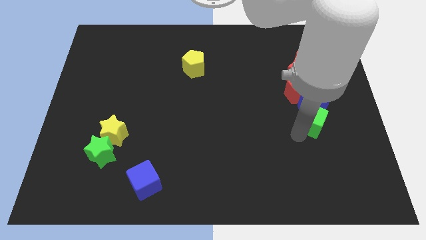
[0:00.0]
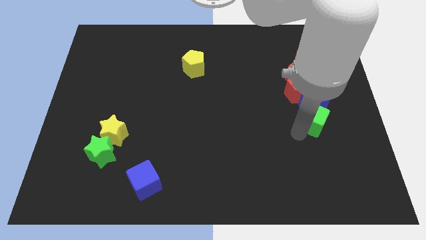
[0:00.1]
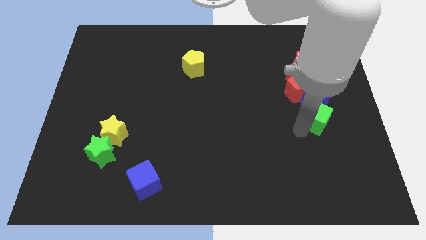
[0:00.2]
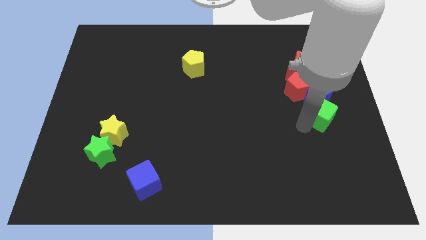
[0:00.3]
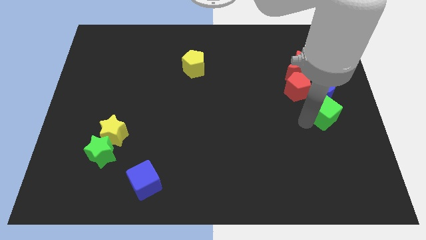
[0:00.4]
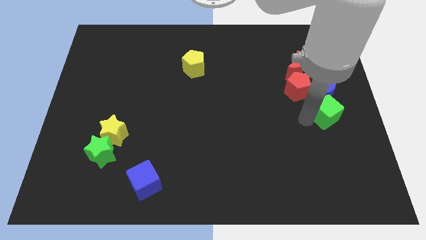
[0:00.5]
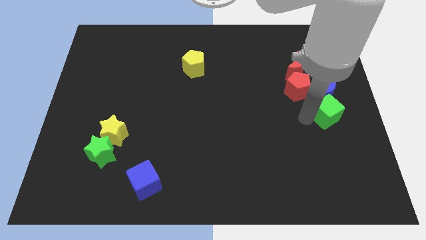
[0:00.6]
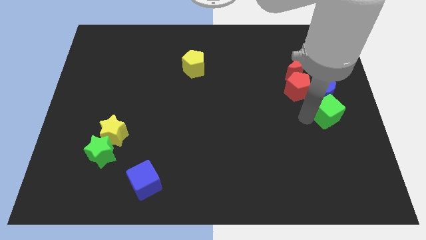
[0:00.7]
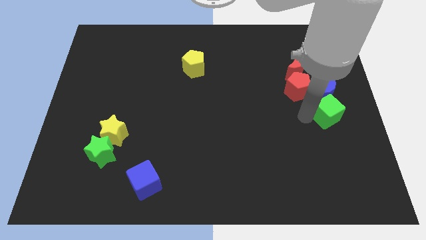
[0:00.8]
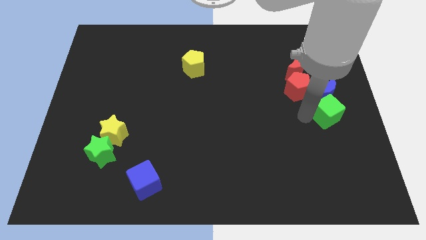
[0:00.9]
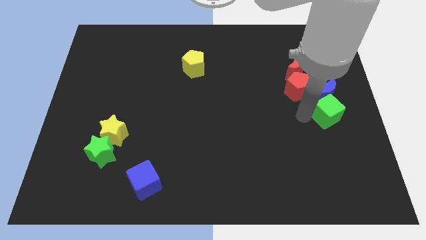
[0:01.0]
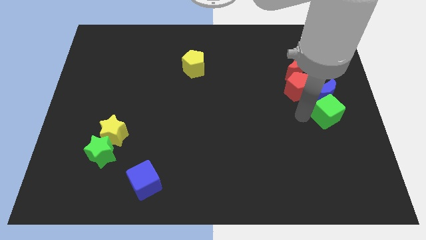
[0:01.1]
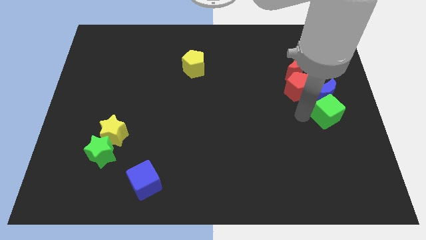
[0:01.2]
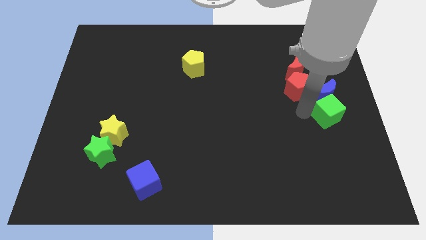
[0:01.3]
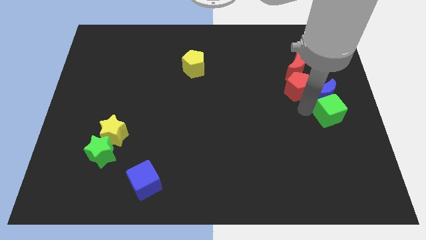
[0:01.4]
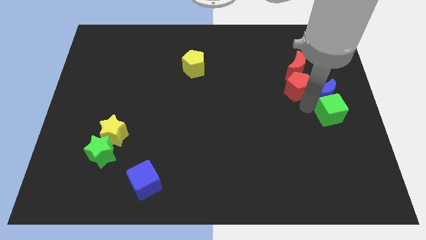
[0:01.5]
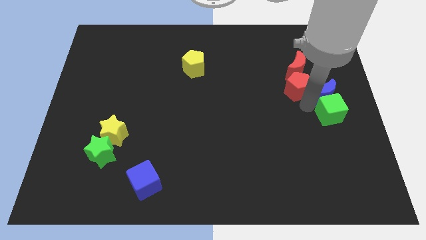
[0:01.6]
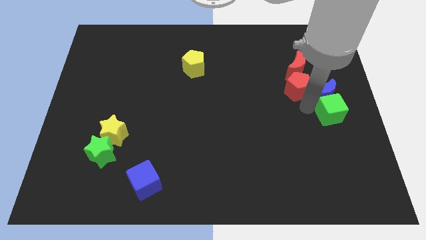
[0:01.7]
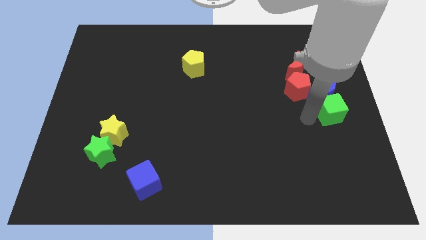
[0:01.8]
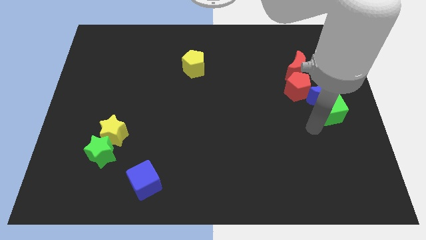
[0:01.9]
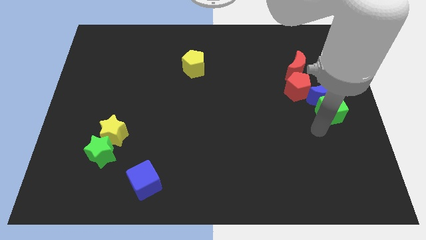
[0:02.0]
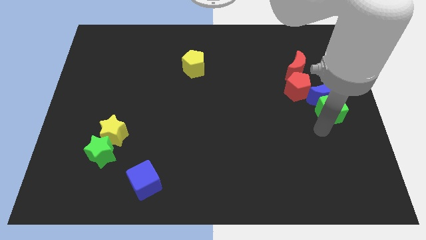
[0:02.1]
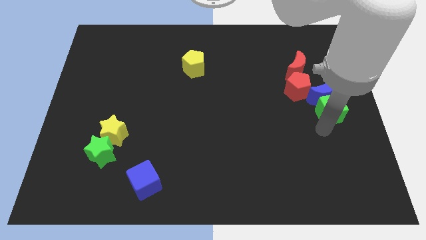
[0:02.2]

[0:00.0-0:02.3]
push the green cube and blue moon below the red blocks

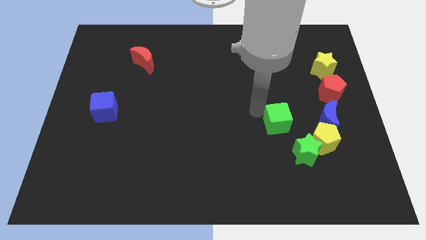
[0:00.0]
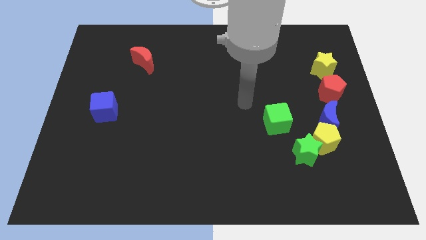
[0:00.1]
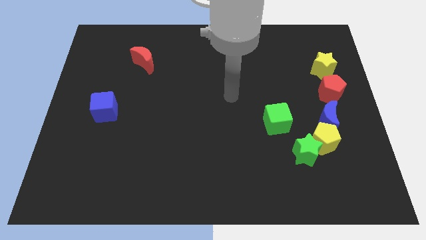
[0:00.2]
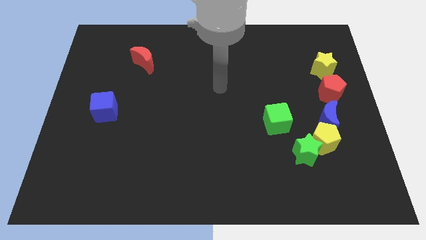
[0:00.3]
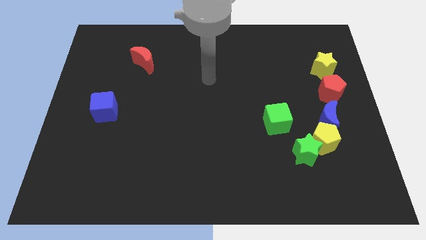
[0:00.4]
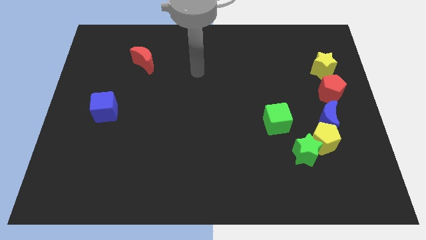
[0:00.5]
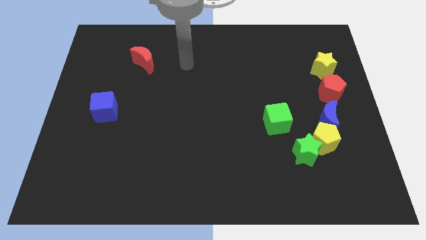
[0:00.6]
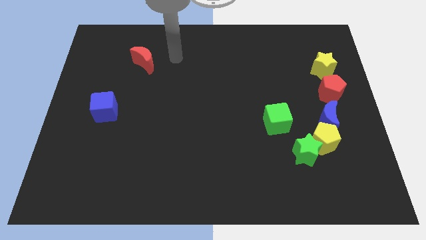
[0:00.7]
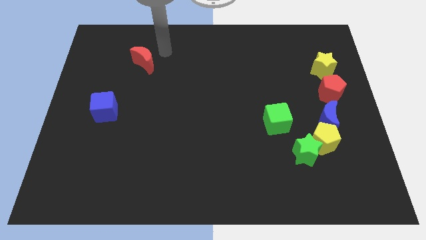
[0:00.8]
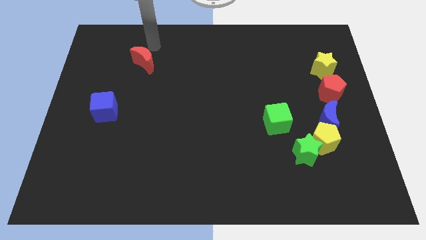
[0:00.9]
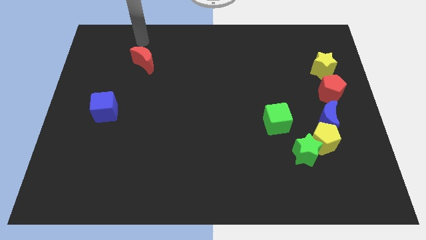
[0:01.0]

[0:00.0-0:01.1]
move your arm towards the red crescent

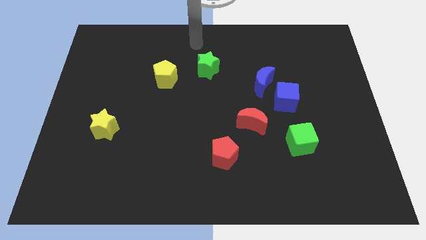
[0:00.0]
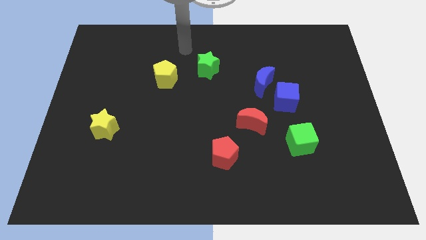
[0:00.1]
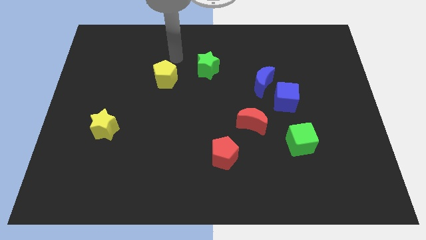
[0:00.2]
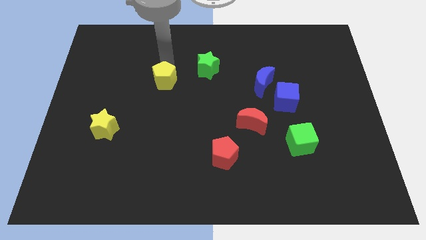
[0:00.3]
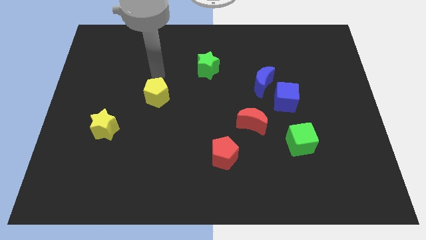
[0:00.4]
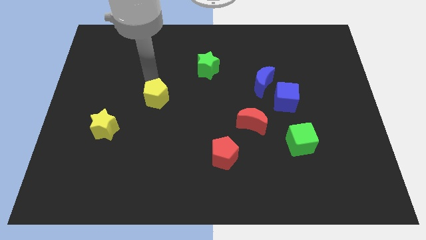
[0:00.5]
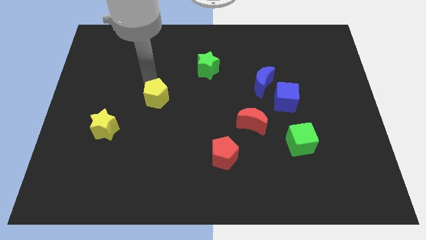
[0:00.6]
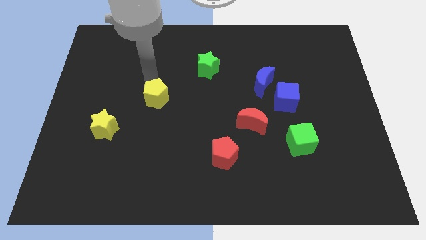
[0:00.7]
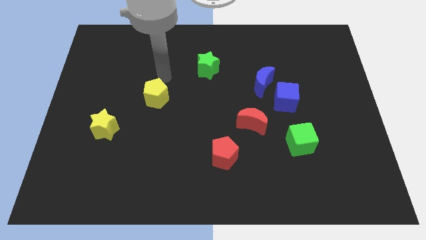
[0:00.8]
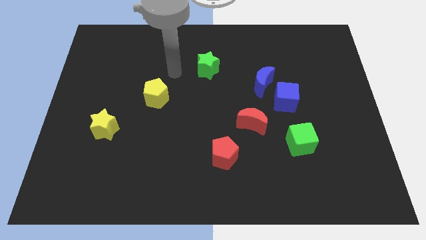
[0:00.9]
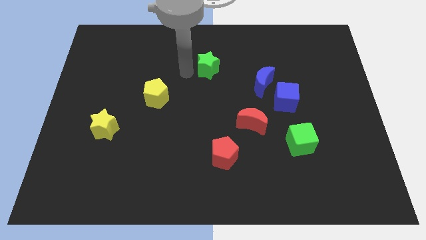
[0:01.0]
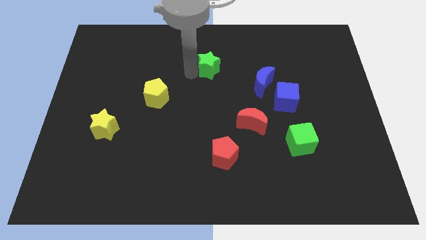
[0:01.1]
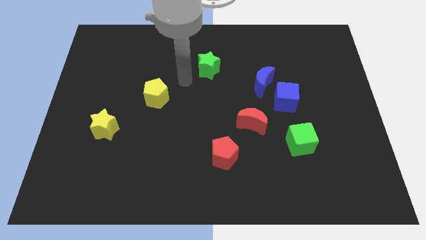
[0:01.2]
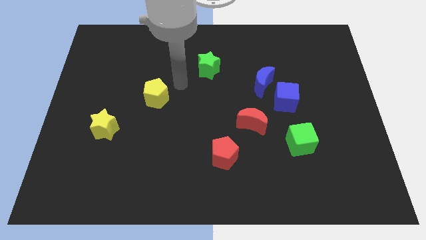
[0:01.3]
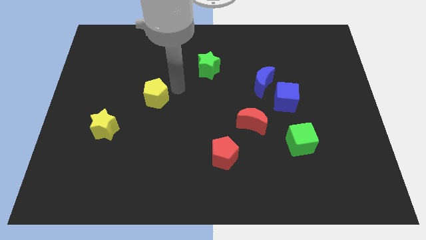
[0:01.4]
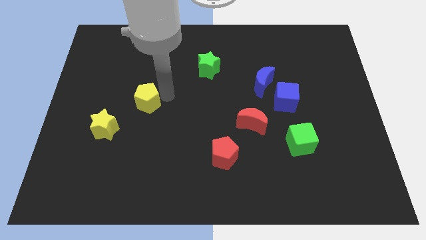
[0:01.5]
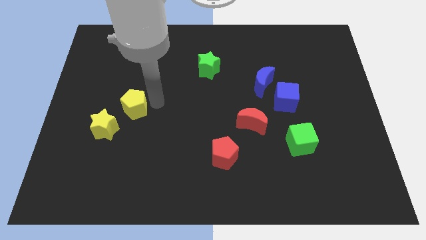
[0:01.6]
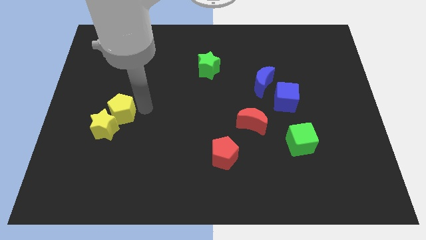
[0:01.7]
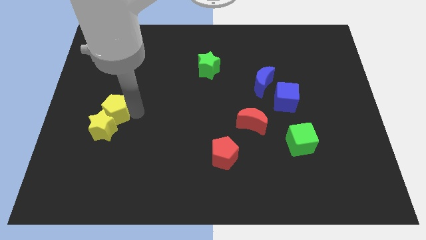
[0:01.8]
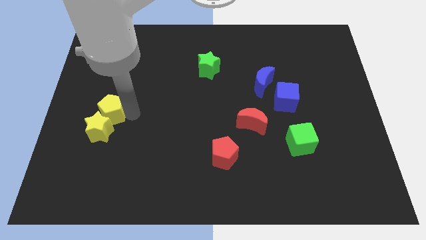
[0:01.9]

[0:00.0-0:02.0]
push the yellow pentagon into the yellow star

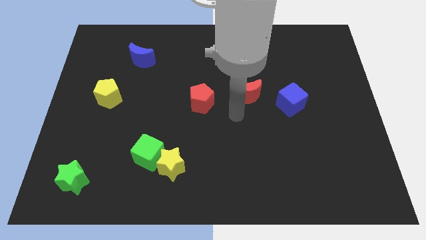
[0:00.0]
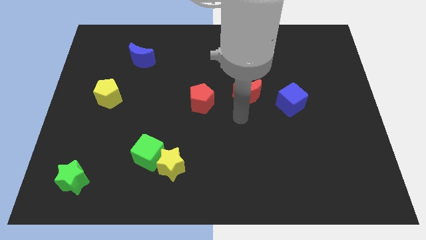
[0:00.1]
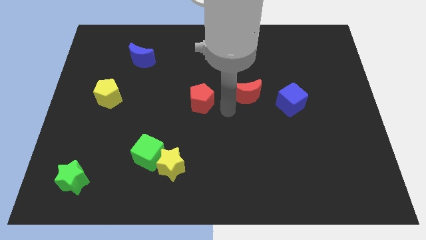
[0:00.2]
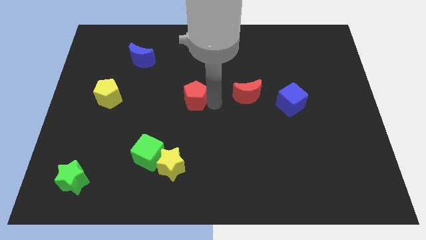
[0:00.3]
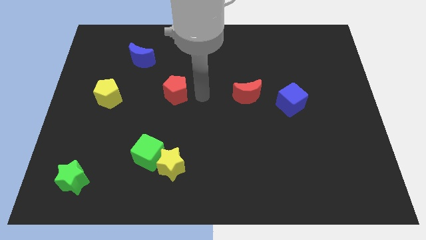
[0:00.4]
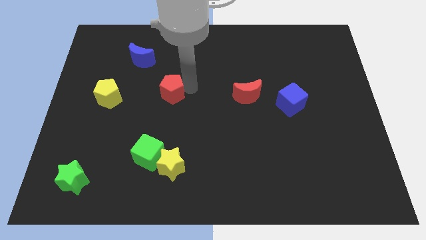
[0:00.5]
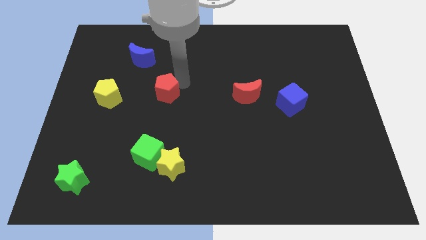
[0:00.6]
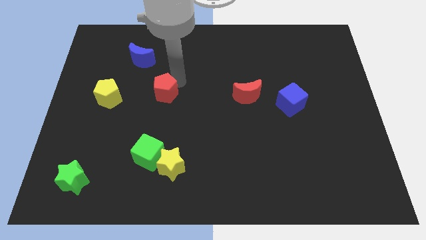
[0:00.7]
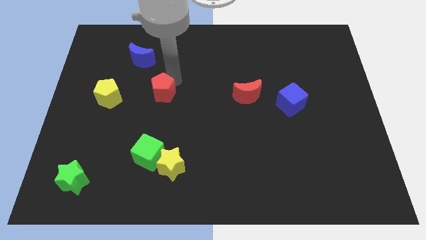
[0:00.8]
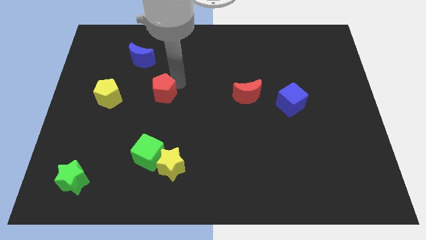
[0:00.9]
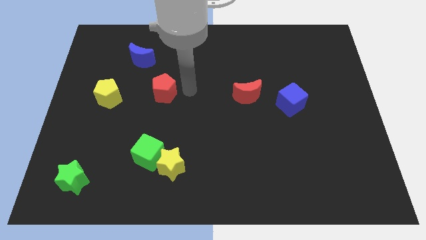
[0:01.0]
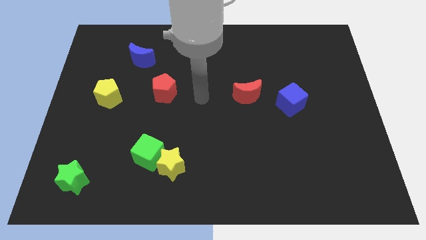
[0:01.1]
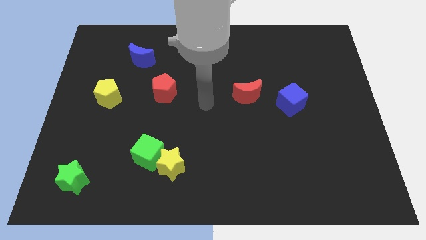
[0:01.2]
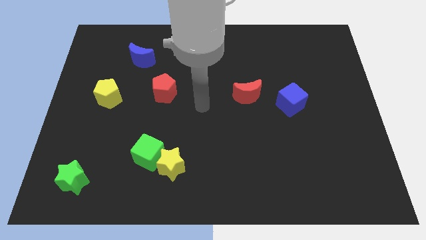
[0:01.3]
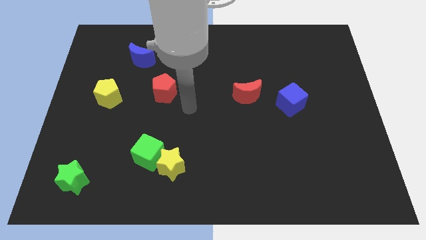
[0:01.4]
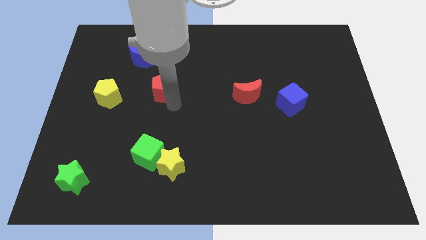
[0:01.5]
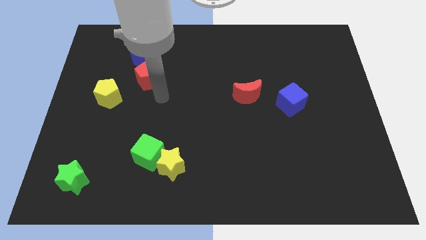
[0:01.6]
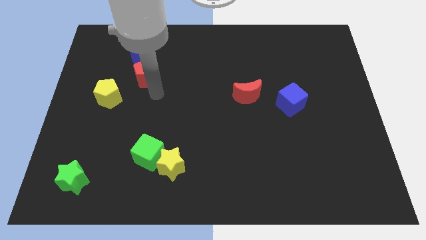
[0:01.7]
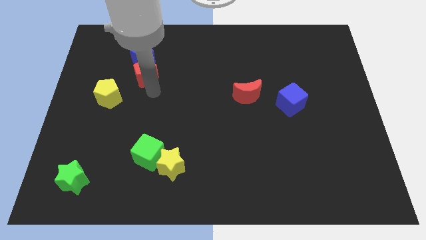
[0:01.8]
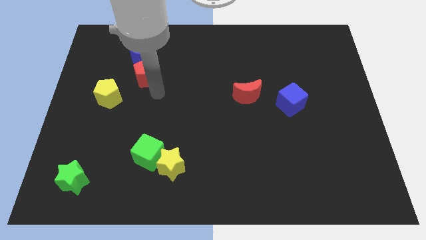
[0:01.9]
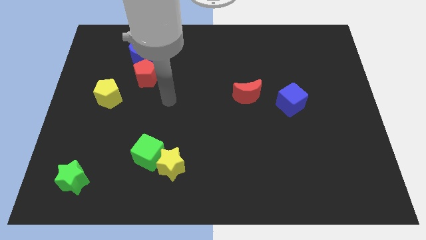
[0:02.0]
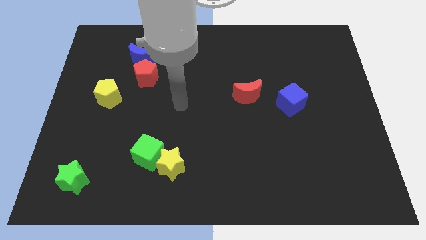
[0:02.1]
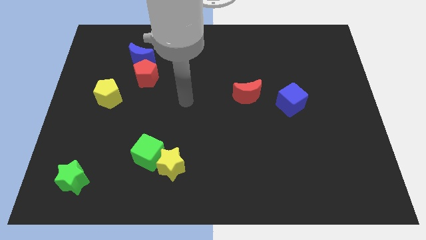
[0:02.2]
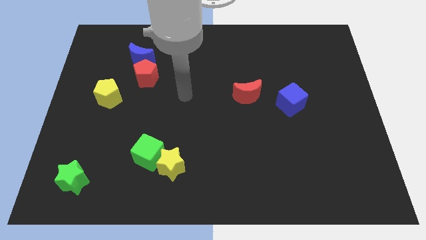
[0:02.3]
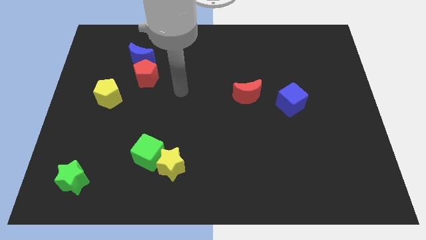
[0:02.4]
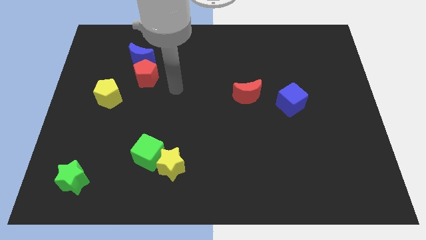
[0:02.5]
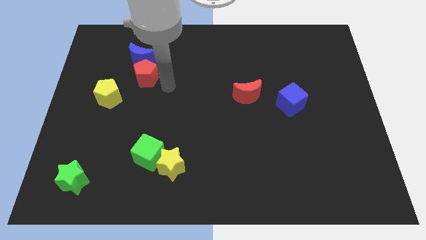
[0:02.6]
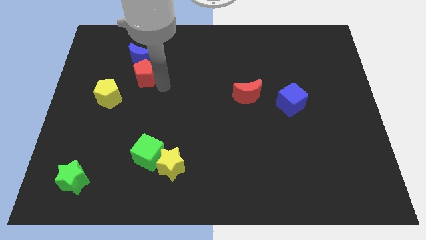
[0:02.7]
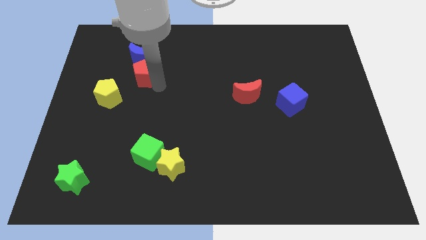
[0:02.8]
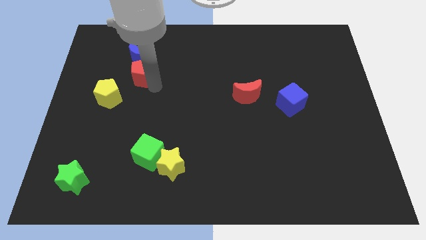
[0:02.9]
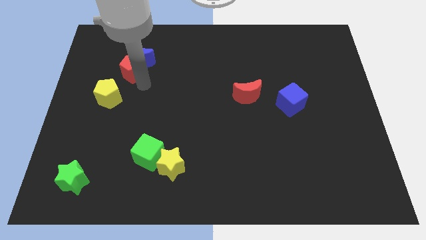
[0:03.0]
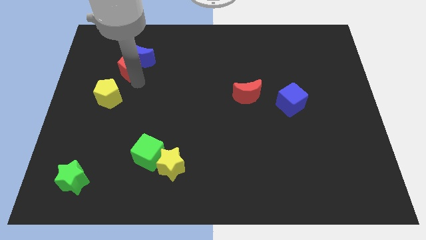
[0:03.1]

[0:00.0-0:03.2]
slide the red pentagon diagonally top right to the yellow pentagon

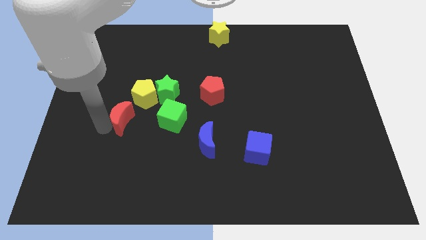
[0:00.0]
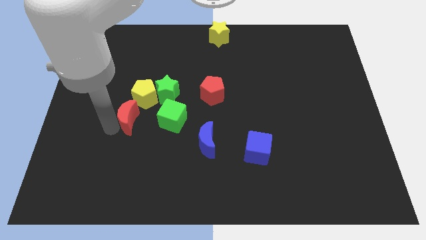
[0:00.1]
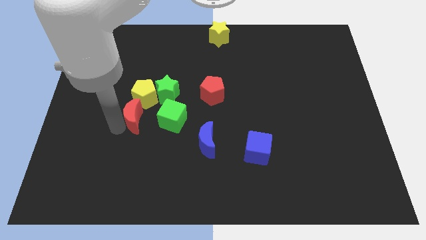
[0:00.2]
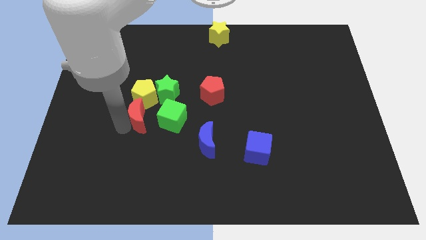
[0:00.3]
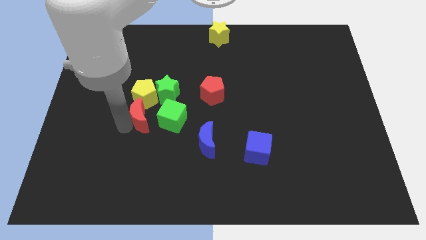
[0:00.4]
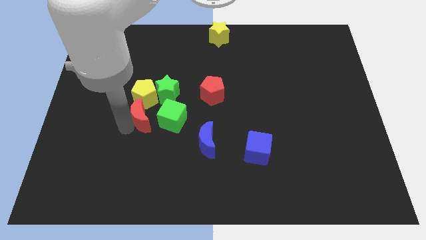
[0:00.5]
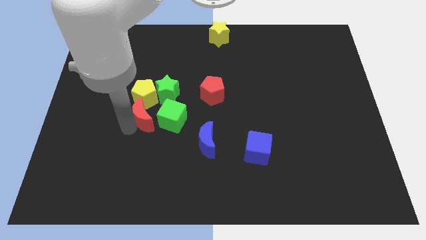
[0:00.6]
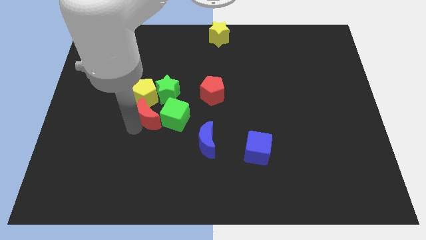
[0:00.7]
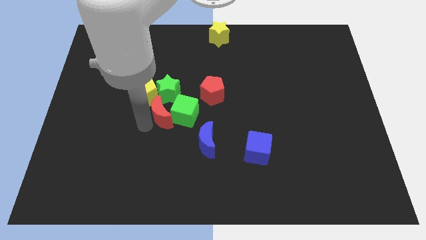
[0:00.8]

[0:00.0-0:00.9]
push the red crescent into the green cube
